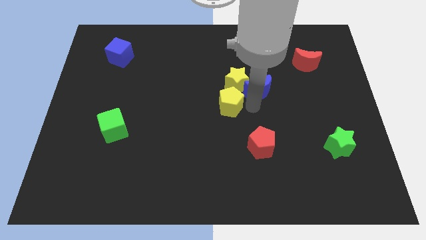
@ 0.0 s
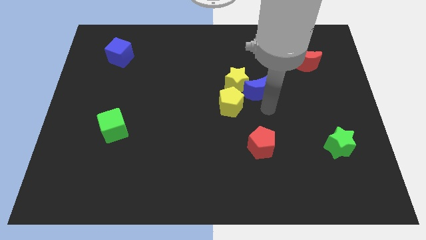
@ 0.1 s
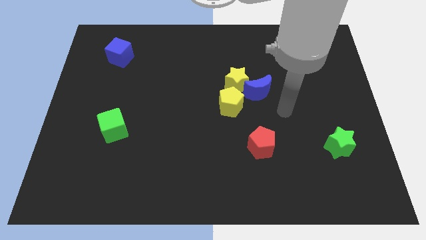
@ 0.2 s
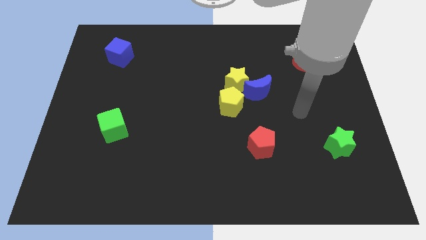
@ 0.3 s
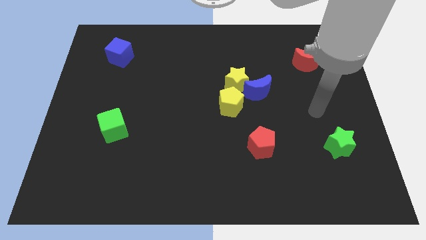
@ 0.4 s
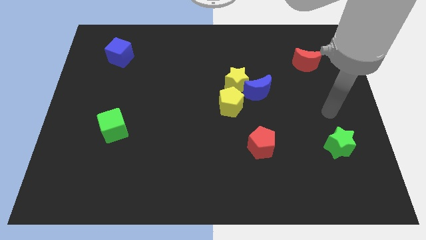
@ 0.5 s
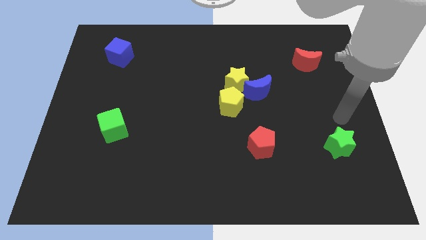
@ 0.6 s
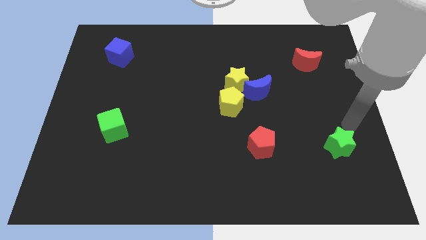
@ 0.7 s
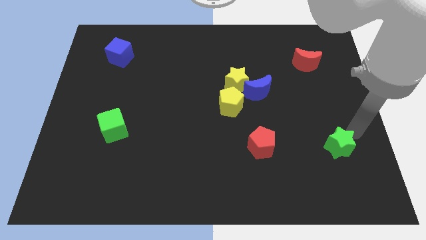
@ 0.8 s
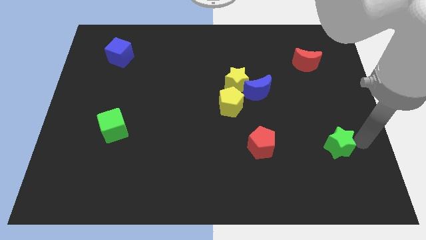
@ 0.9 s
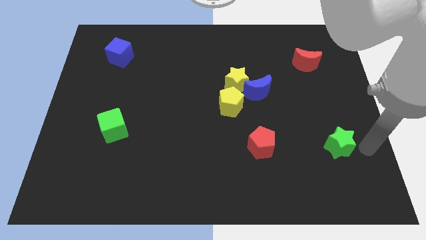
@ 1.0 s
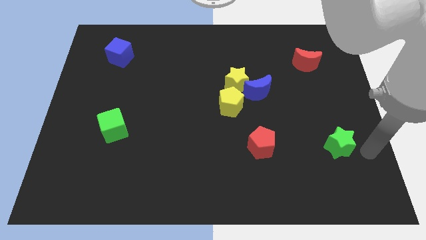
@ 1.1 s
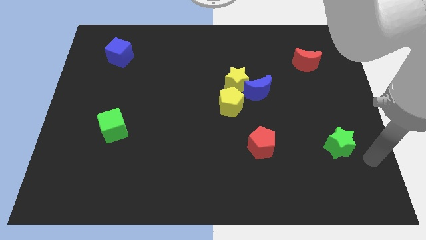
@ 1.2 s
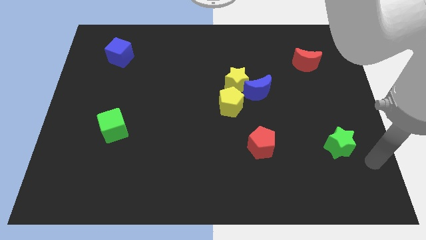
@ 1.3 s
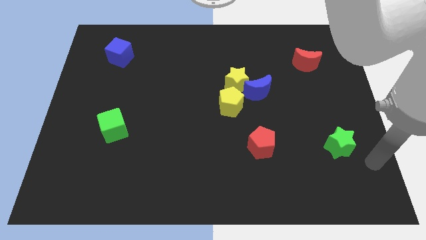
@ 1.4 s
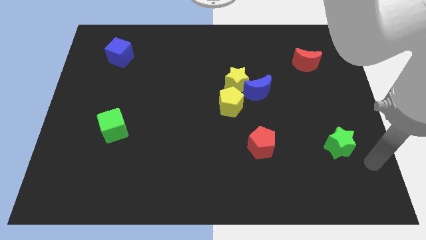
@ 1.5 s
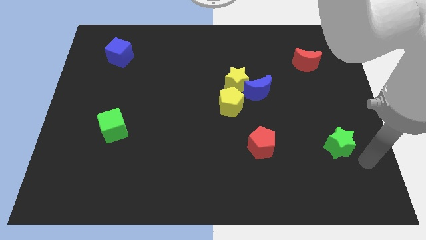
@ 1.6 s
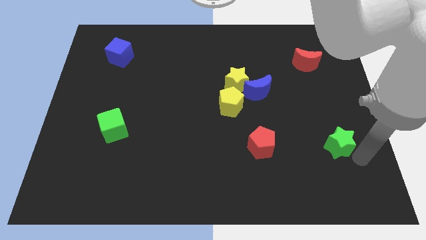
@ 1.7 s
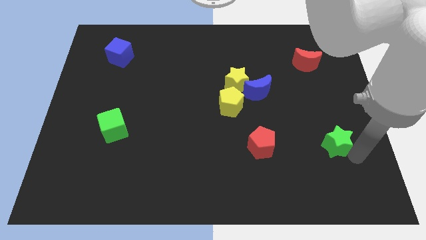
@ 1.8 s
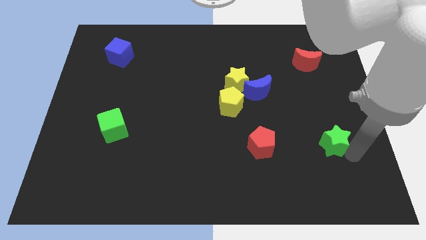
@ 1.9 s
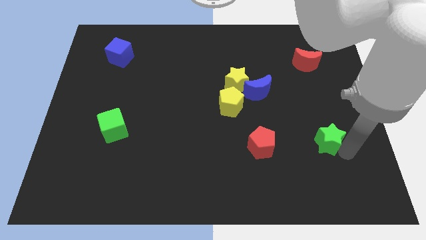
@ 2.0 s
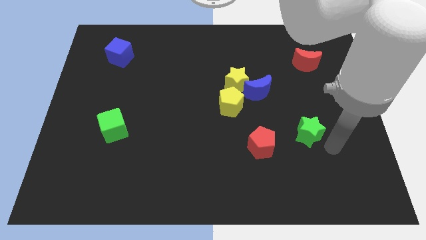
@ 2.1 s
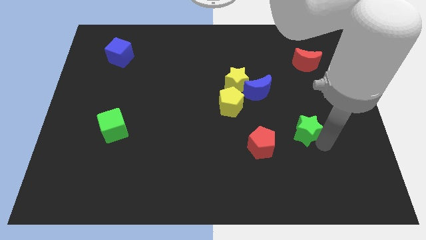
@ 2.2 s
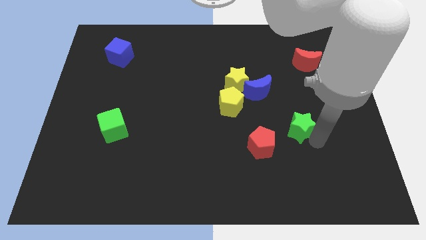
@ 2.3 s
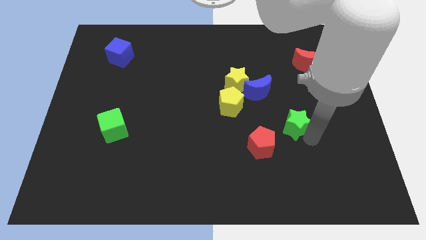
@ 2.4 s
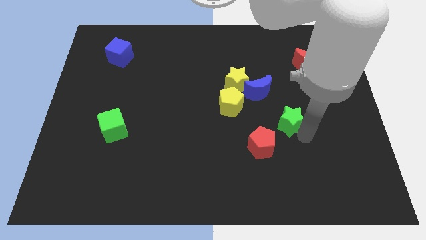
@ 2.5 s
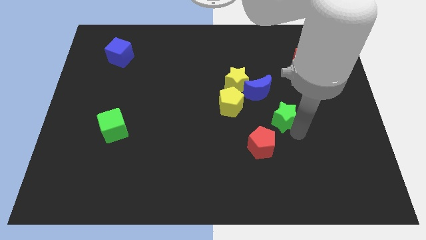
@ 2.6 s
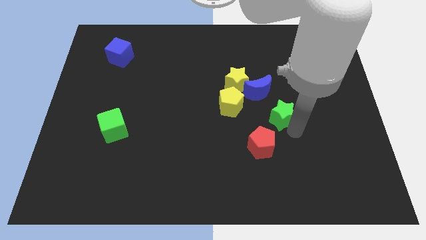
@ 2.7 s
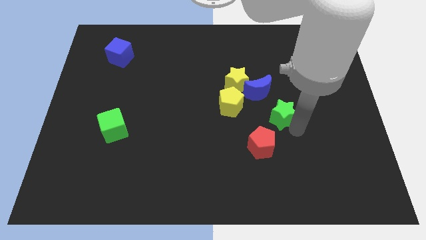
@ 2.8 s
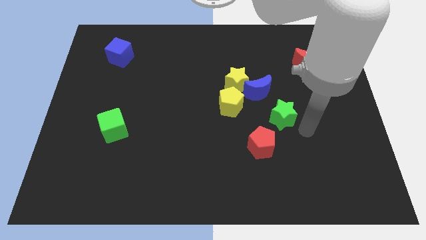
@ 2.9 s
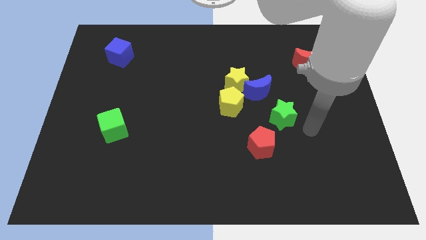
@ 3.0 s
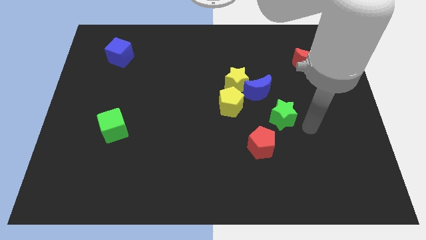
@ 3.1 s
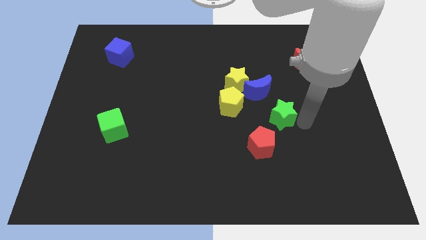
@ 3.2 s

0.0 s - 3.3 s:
push the green star towards blue crescent

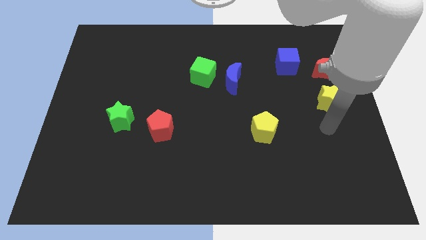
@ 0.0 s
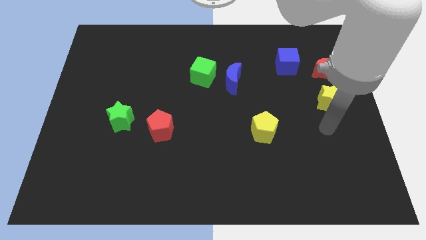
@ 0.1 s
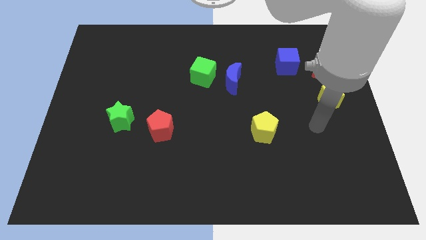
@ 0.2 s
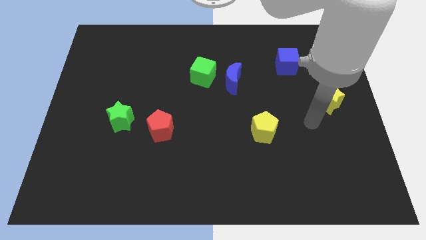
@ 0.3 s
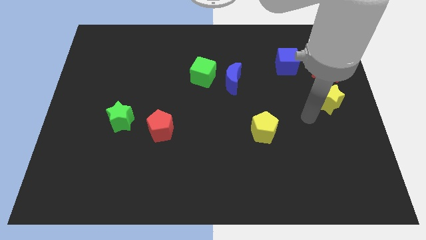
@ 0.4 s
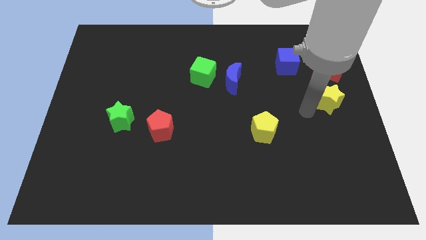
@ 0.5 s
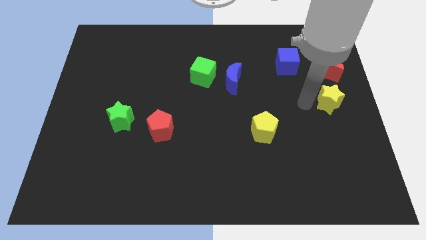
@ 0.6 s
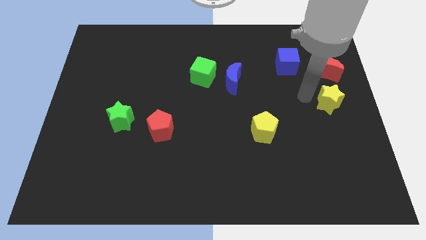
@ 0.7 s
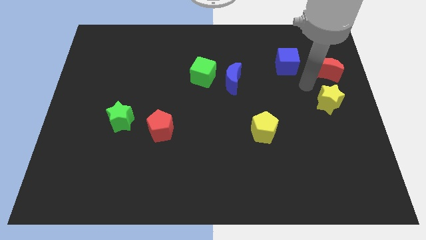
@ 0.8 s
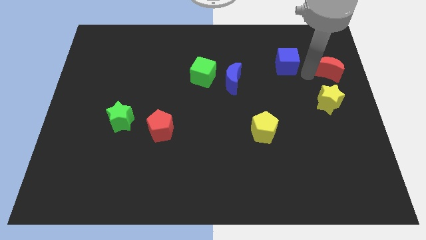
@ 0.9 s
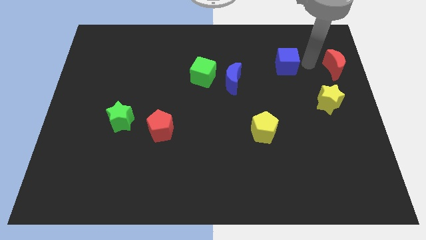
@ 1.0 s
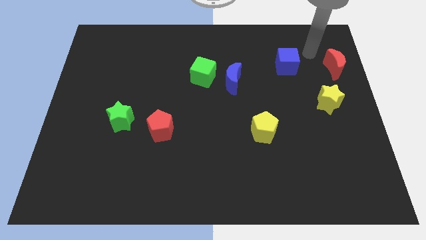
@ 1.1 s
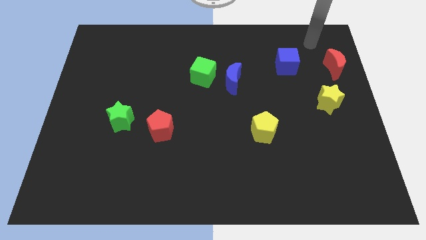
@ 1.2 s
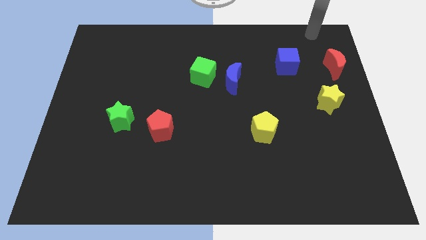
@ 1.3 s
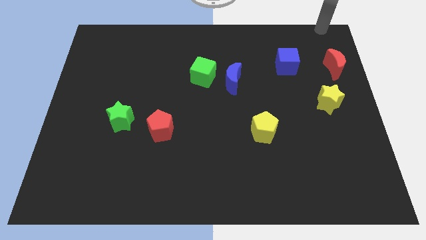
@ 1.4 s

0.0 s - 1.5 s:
slightly touch left to the red moon

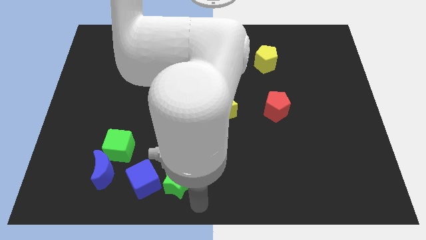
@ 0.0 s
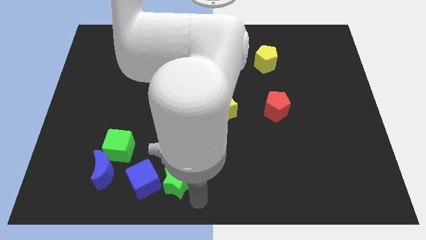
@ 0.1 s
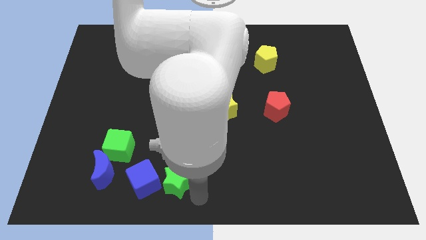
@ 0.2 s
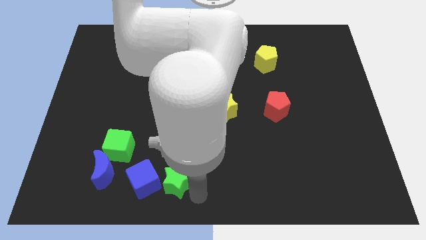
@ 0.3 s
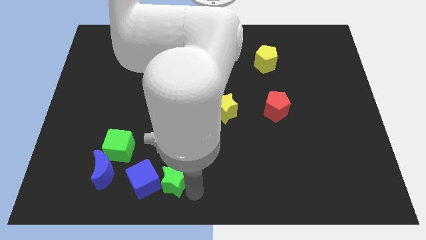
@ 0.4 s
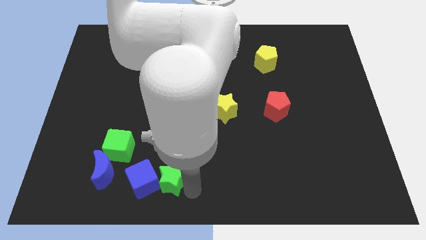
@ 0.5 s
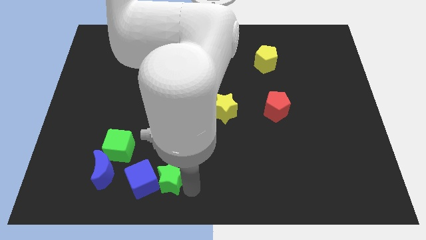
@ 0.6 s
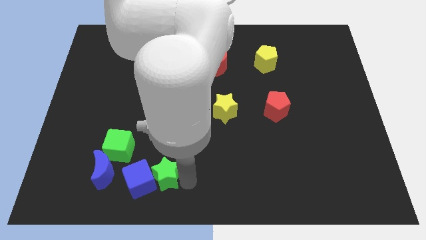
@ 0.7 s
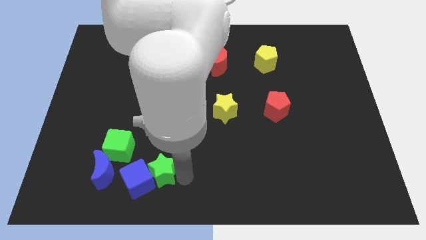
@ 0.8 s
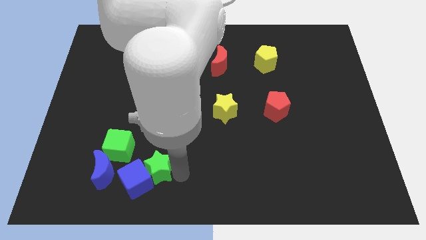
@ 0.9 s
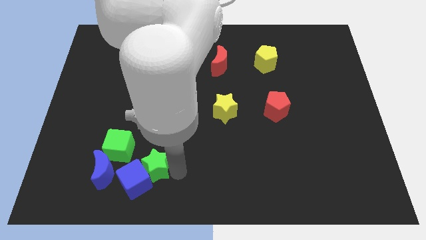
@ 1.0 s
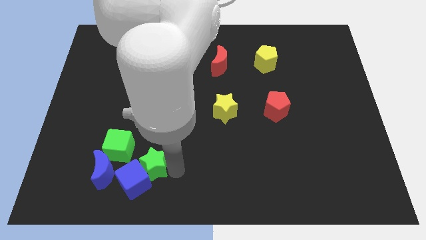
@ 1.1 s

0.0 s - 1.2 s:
push the green star into the blue cube

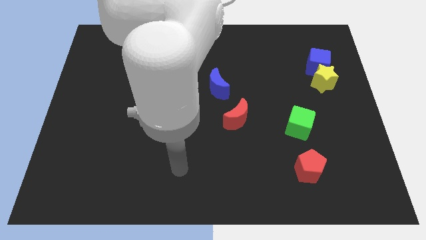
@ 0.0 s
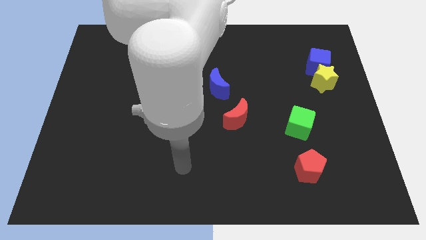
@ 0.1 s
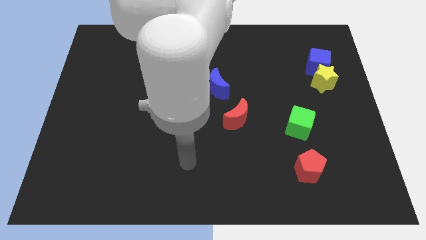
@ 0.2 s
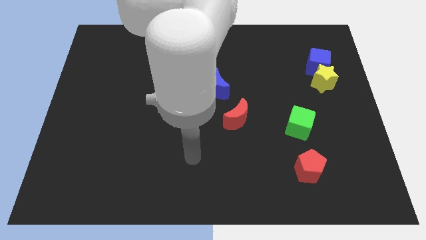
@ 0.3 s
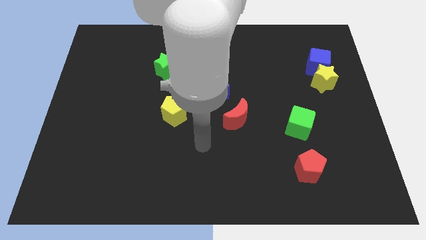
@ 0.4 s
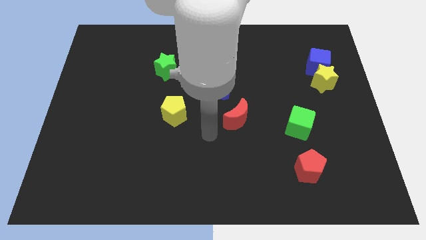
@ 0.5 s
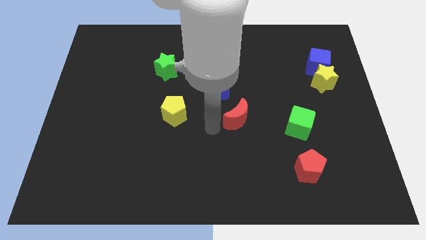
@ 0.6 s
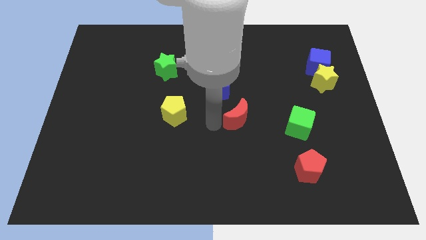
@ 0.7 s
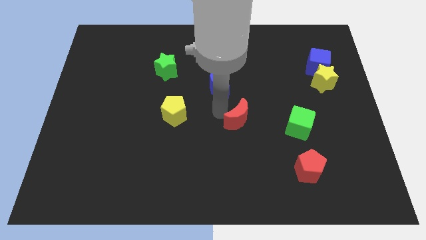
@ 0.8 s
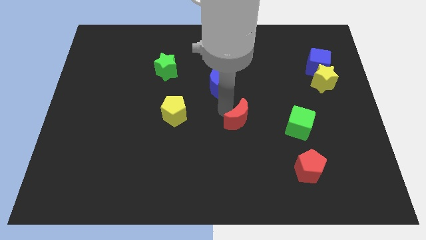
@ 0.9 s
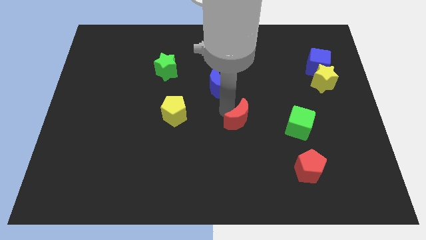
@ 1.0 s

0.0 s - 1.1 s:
move your arm to the left of red moon

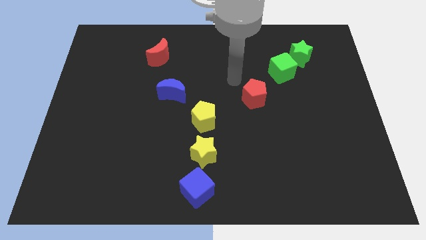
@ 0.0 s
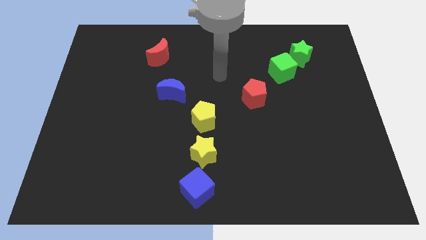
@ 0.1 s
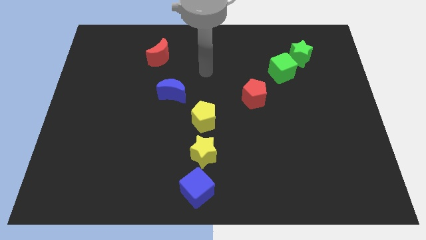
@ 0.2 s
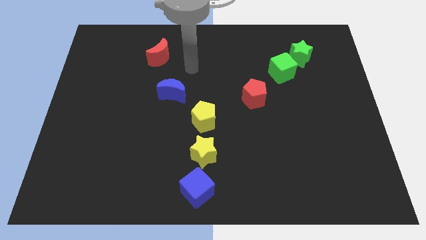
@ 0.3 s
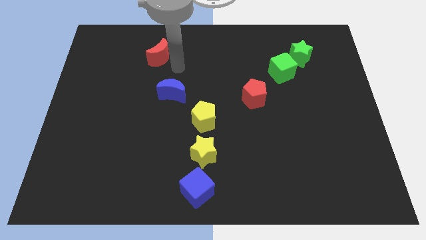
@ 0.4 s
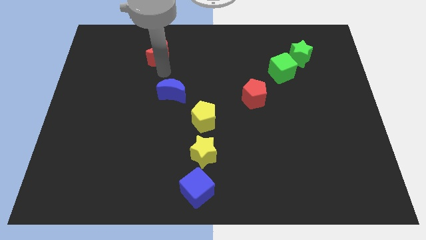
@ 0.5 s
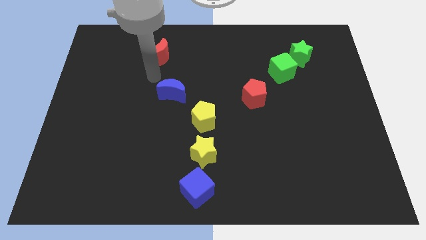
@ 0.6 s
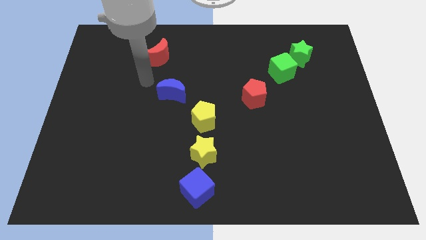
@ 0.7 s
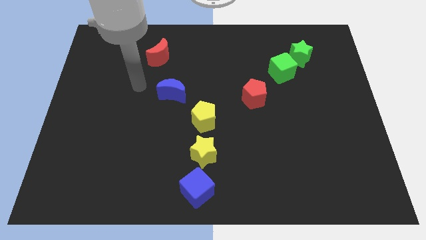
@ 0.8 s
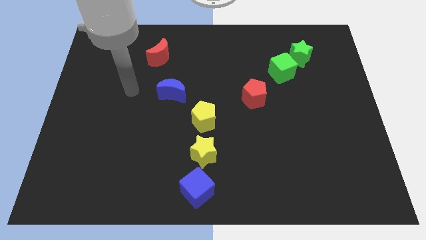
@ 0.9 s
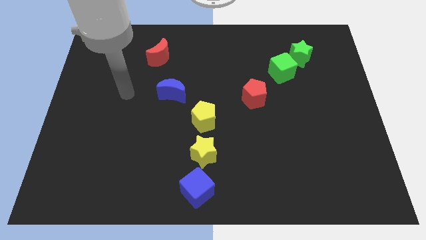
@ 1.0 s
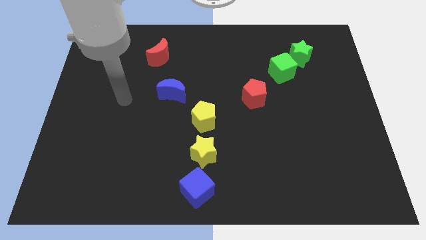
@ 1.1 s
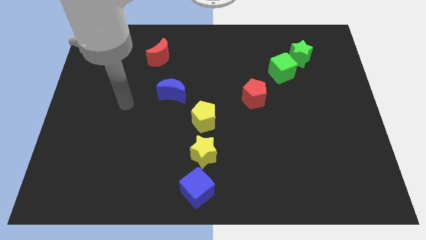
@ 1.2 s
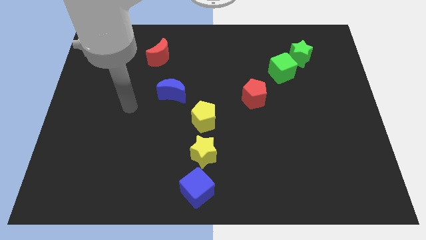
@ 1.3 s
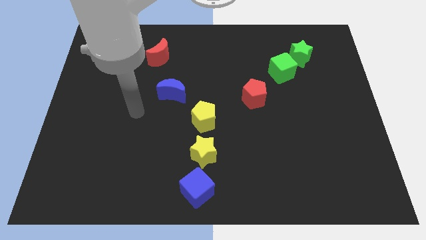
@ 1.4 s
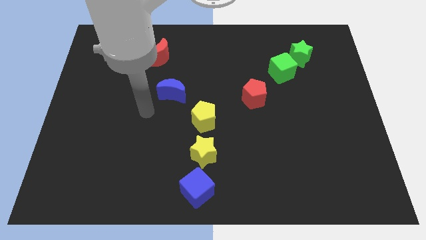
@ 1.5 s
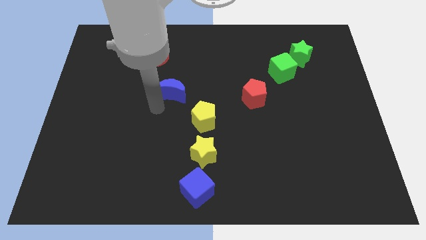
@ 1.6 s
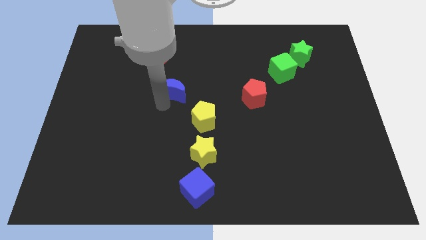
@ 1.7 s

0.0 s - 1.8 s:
move away from the green cube

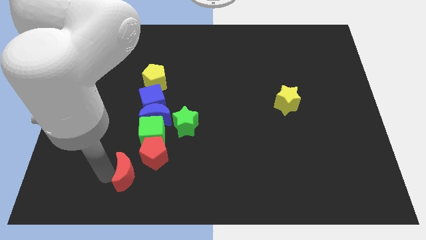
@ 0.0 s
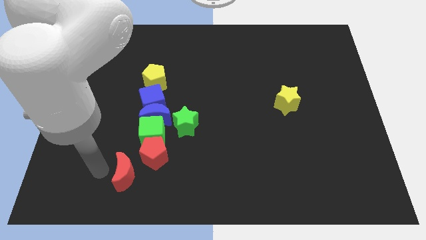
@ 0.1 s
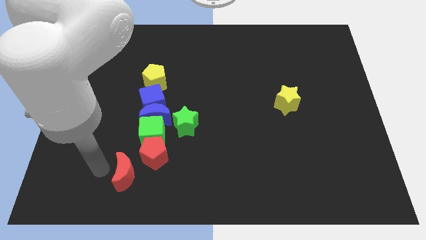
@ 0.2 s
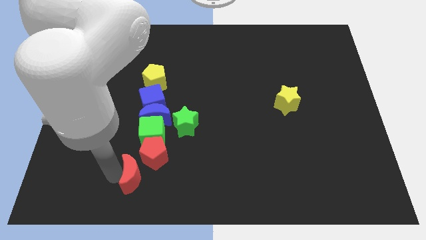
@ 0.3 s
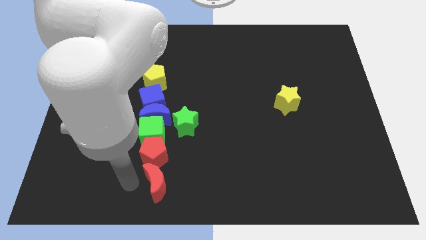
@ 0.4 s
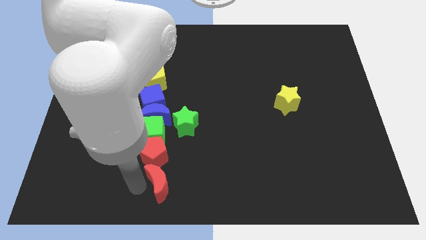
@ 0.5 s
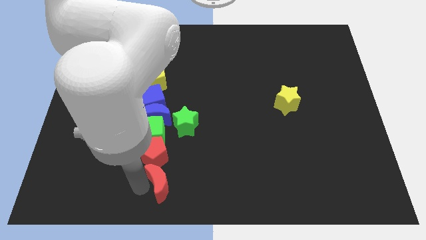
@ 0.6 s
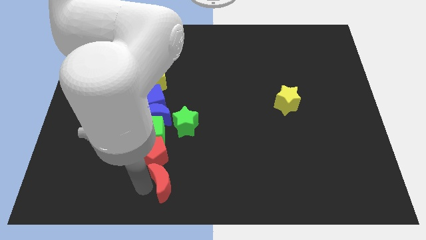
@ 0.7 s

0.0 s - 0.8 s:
move red moon below the red pentagon
